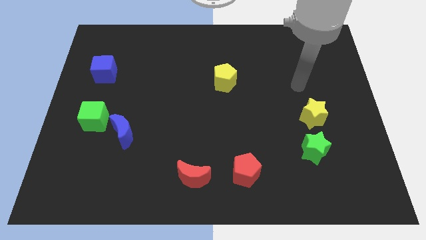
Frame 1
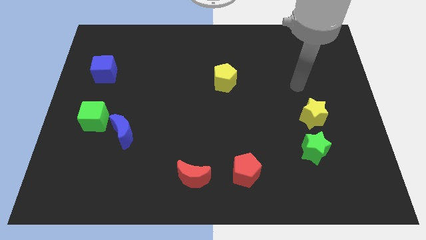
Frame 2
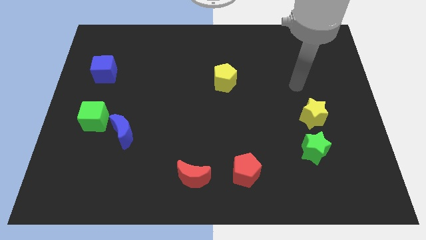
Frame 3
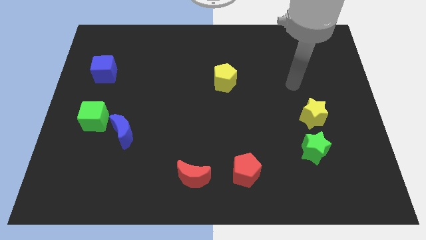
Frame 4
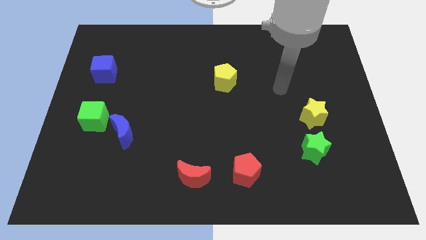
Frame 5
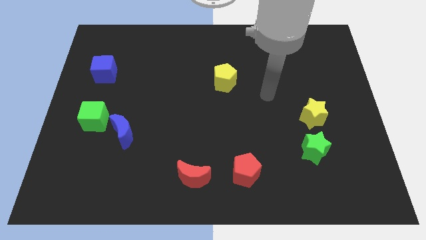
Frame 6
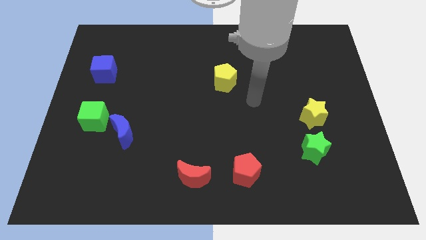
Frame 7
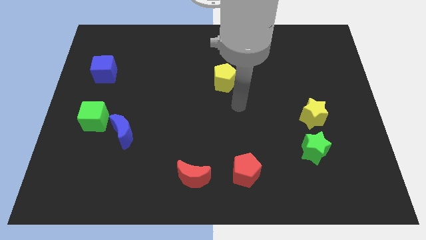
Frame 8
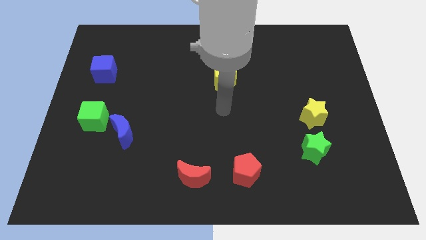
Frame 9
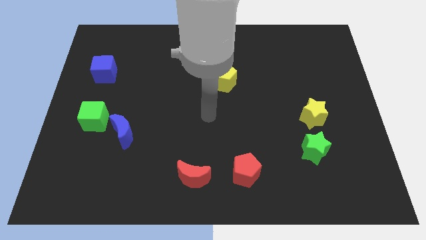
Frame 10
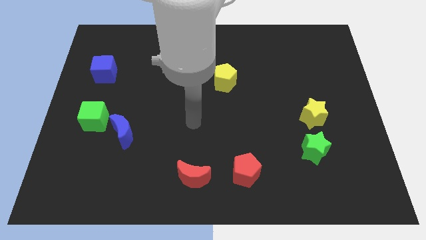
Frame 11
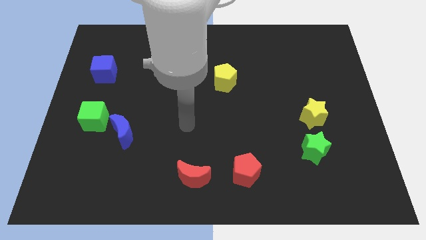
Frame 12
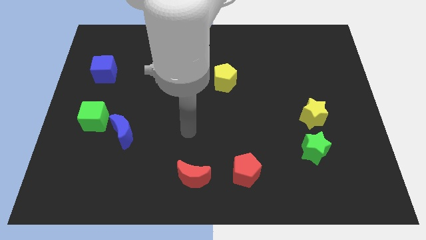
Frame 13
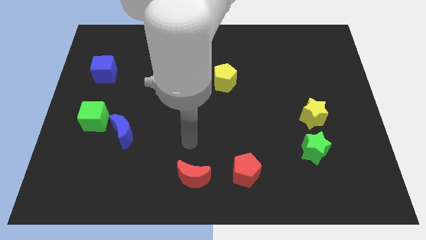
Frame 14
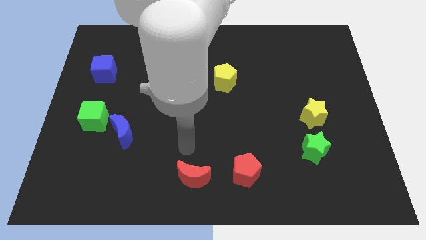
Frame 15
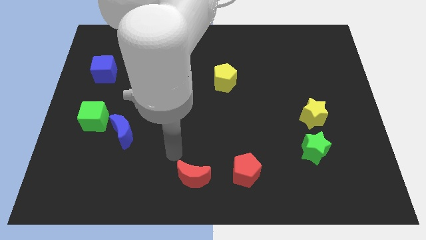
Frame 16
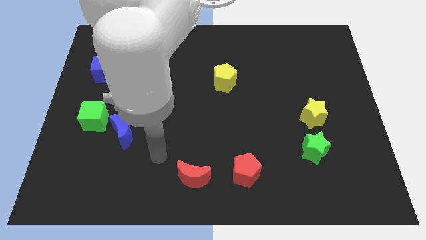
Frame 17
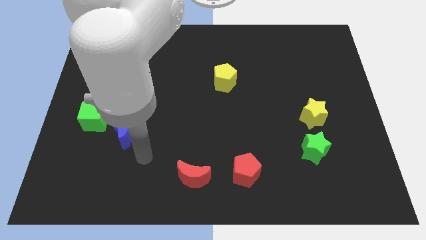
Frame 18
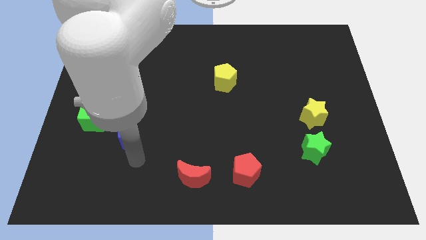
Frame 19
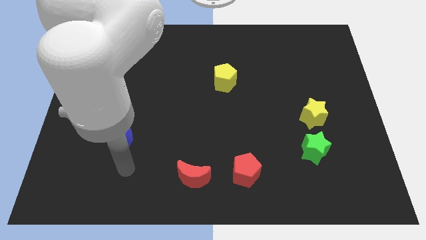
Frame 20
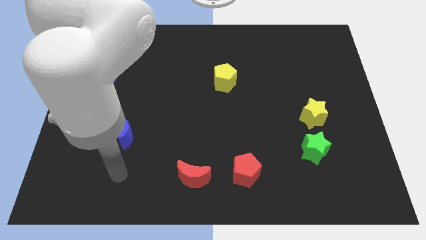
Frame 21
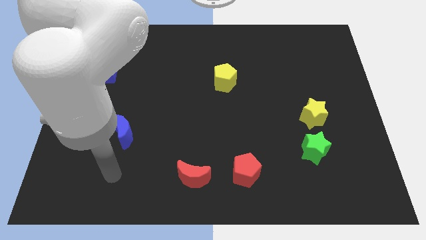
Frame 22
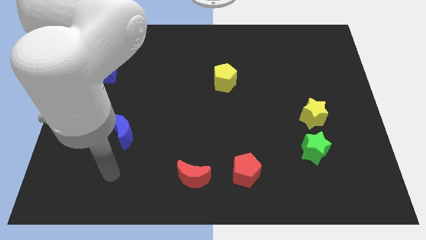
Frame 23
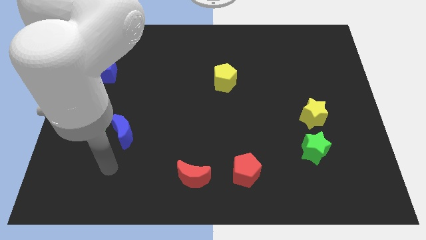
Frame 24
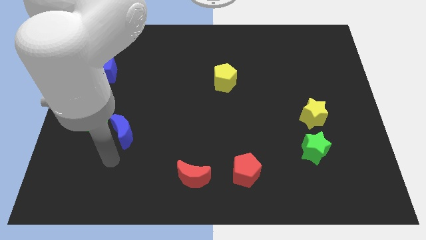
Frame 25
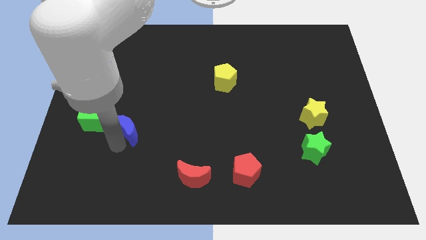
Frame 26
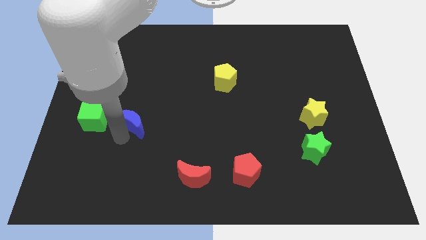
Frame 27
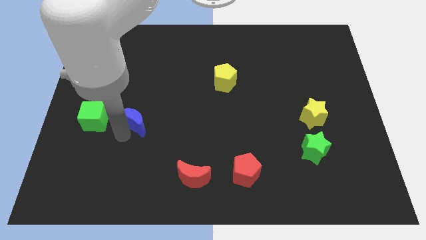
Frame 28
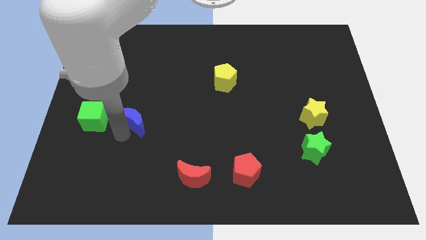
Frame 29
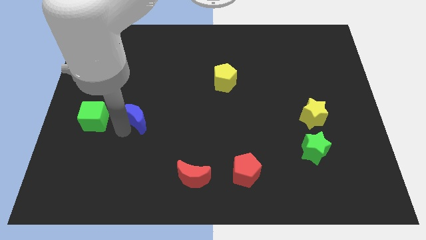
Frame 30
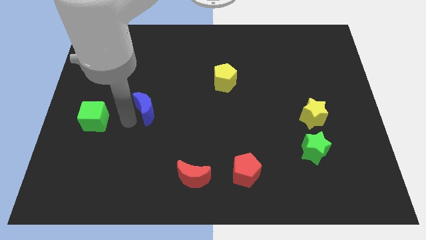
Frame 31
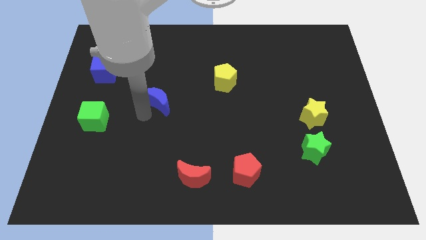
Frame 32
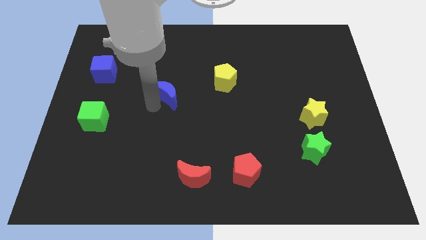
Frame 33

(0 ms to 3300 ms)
move blue crescent towards yellow pentagon

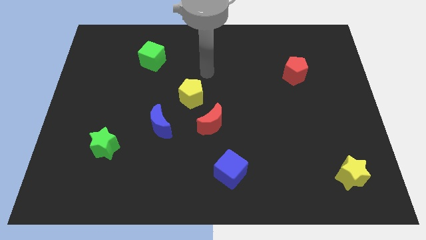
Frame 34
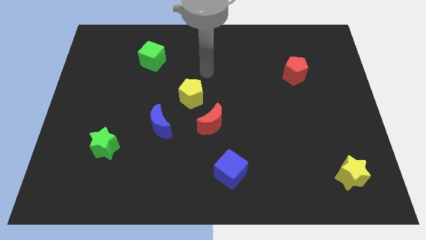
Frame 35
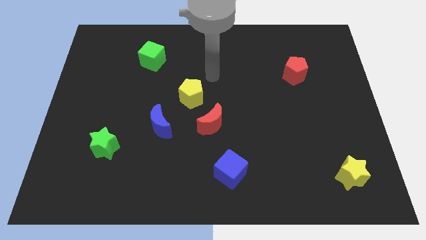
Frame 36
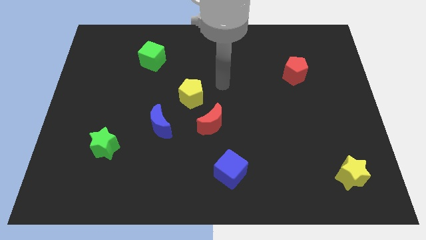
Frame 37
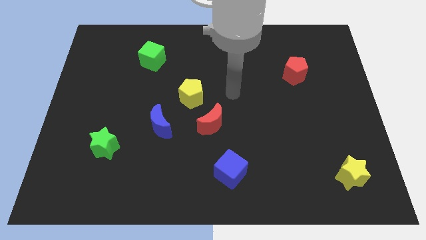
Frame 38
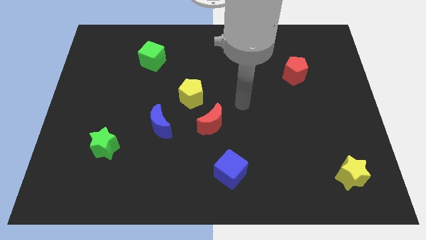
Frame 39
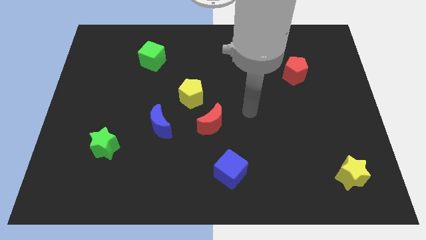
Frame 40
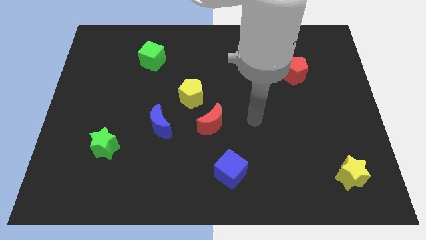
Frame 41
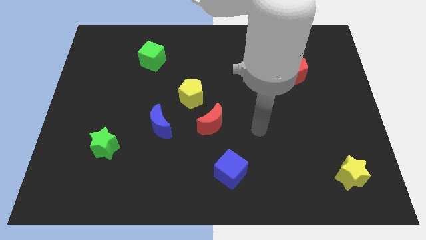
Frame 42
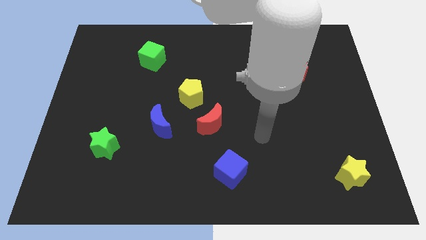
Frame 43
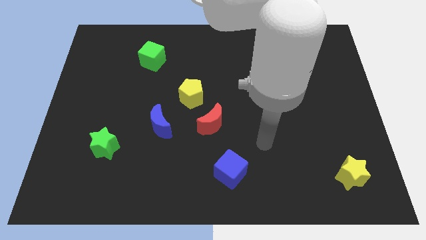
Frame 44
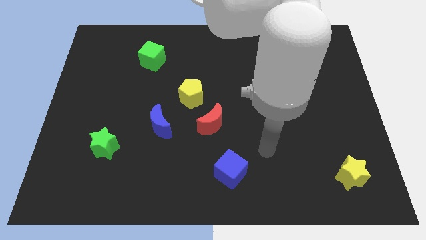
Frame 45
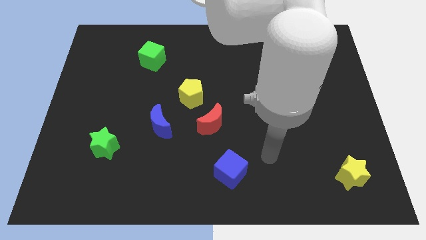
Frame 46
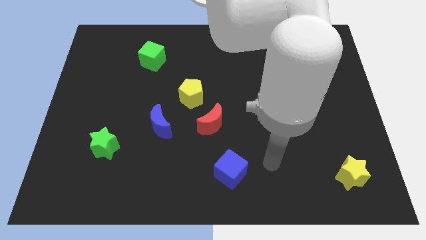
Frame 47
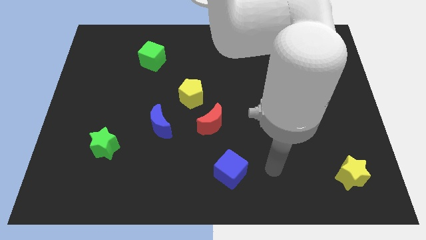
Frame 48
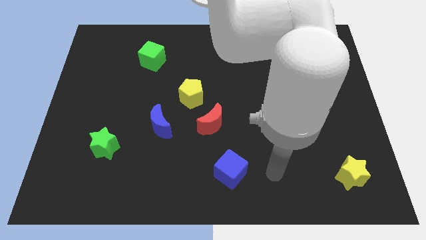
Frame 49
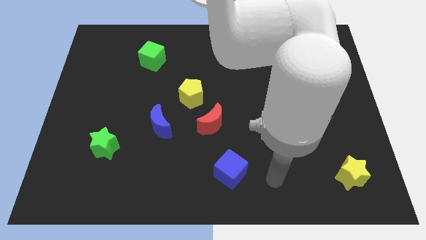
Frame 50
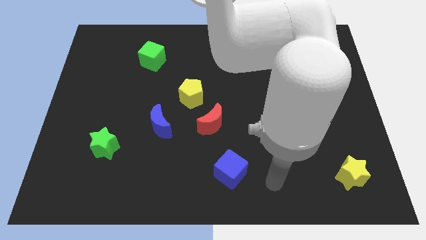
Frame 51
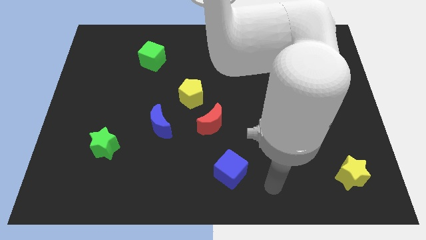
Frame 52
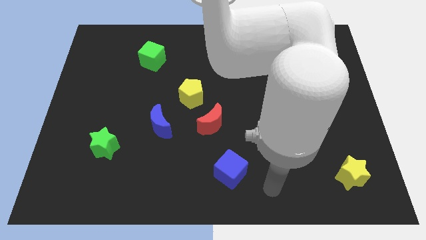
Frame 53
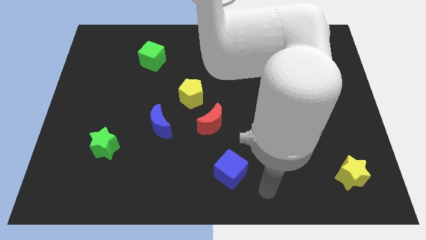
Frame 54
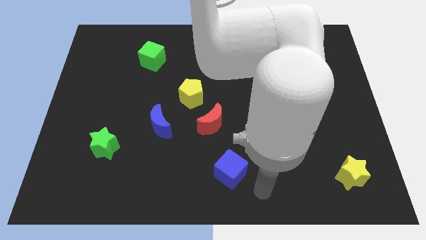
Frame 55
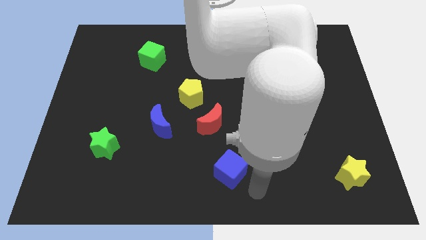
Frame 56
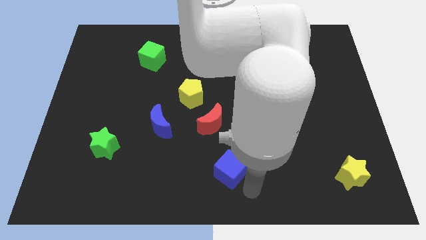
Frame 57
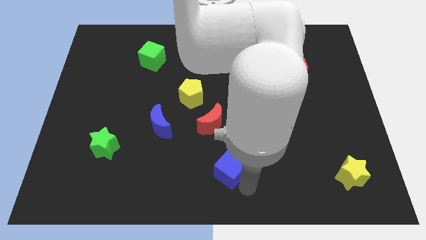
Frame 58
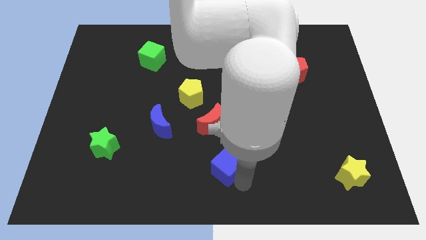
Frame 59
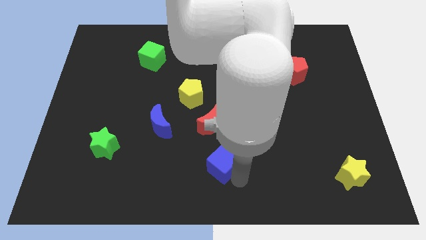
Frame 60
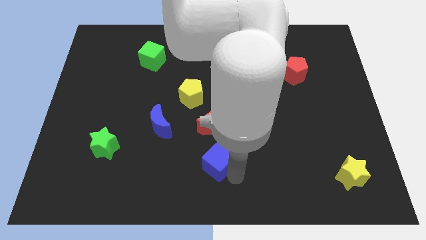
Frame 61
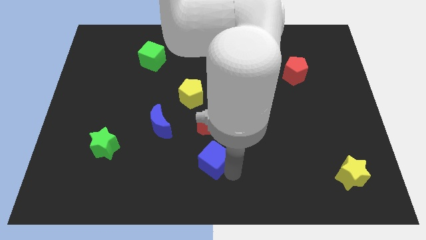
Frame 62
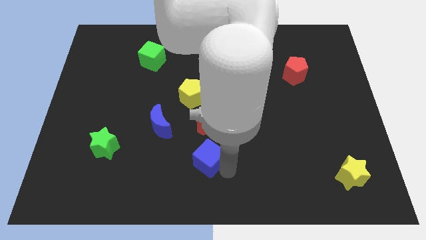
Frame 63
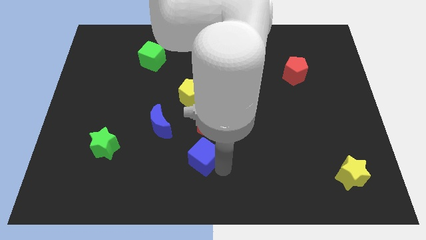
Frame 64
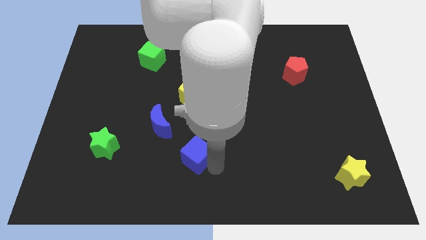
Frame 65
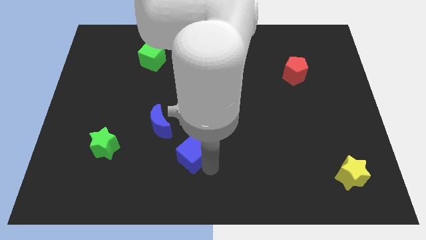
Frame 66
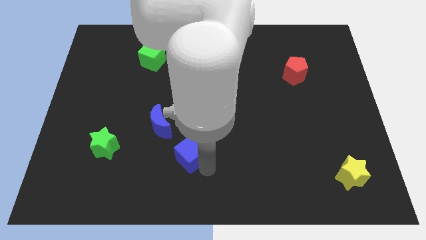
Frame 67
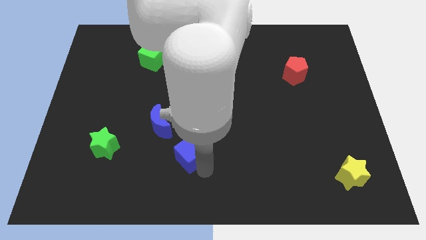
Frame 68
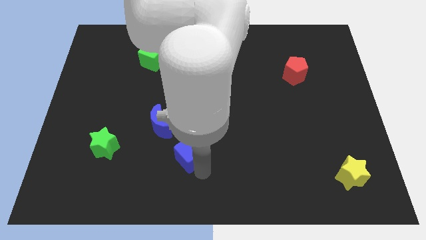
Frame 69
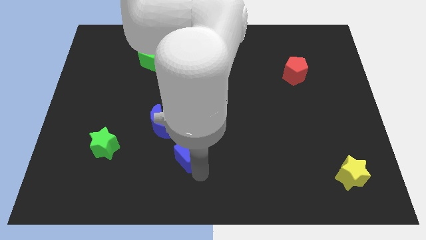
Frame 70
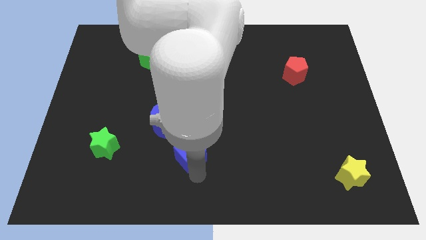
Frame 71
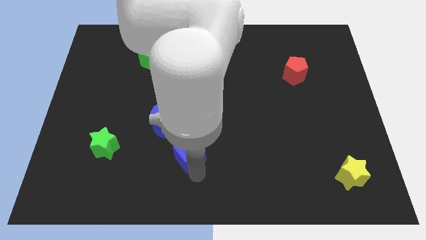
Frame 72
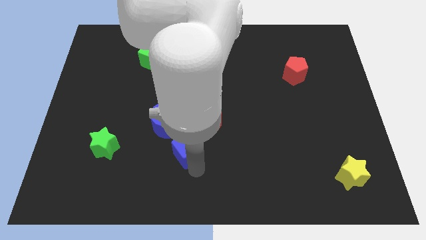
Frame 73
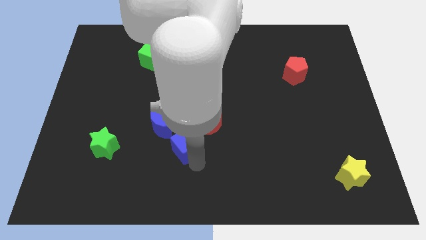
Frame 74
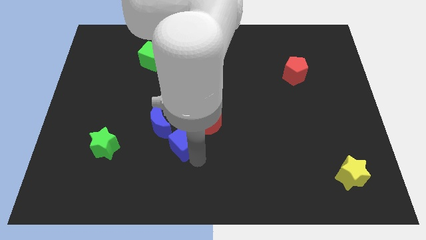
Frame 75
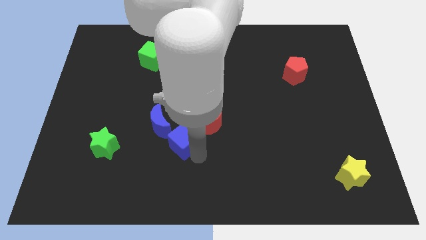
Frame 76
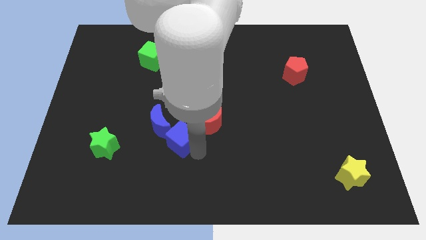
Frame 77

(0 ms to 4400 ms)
slide the blue cube diagonally bottom left to the red moon

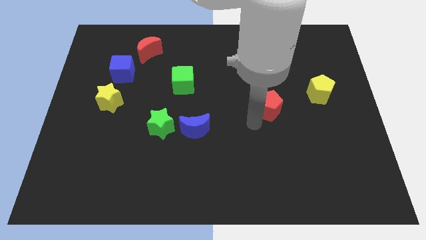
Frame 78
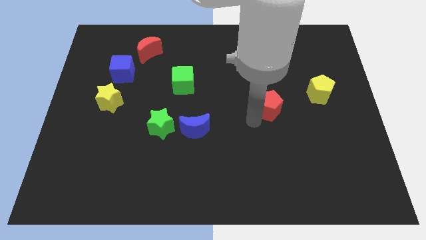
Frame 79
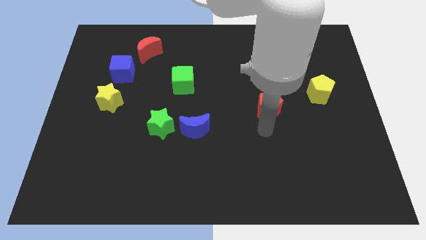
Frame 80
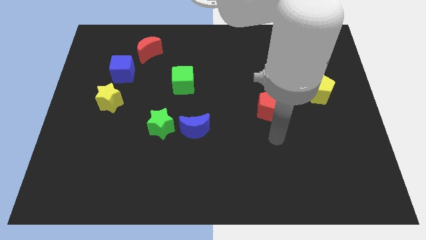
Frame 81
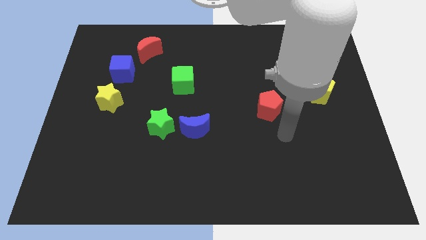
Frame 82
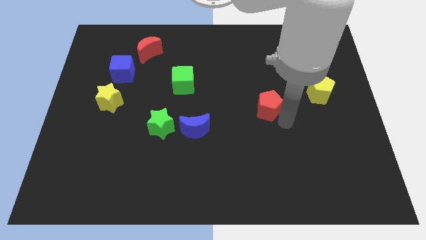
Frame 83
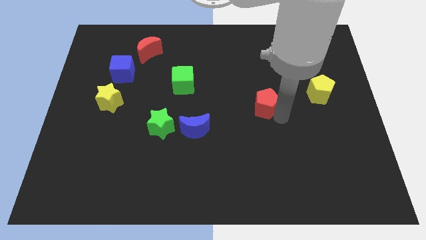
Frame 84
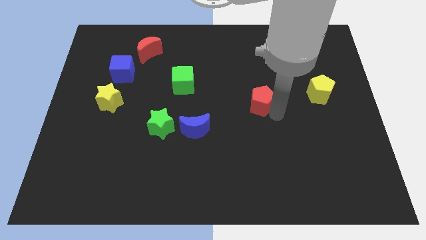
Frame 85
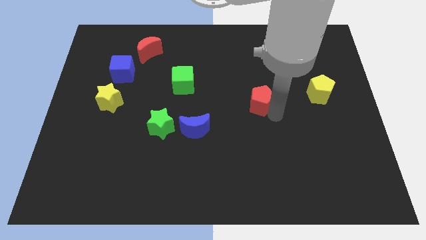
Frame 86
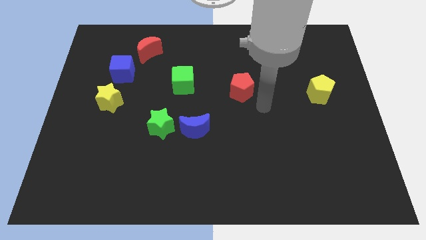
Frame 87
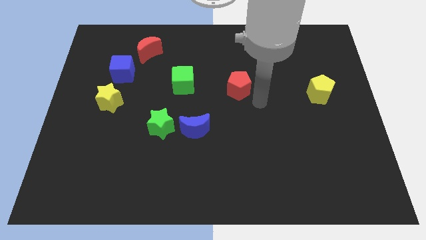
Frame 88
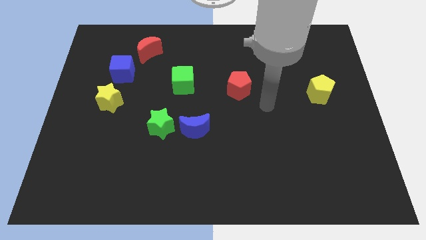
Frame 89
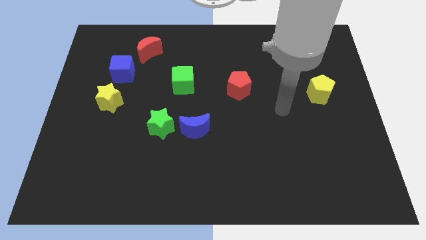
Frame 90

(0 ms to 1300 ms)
move red pentagon to the right of the green block
